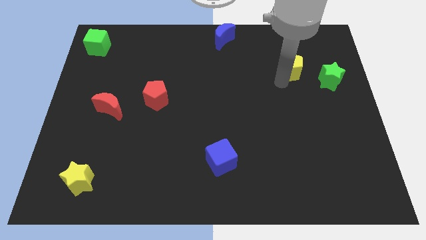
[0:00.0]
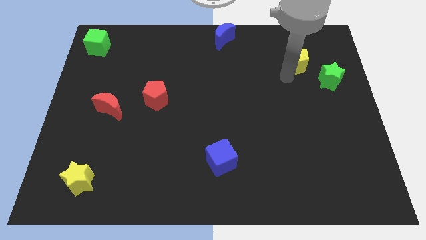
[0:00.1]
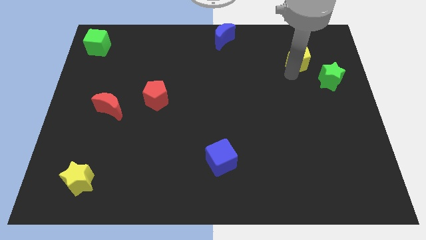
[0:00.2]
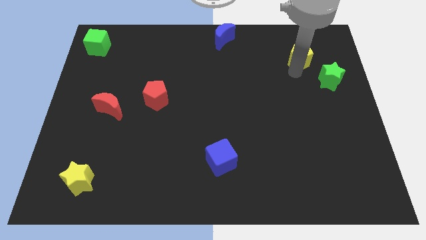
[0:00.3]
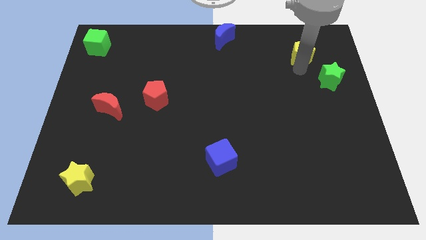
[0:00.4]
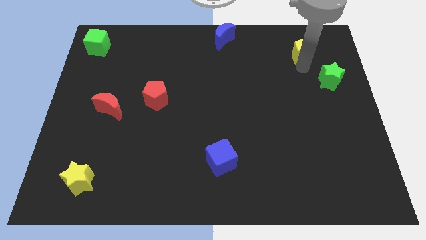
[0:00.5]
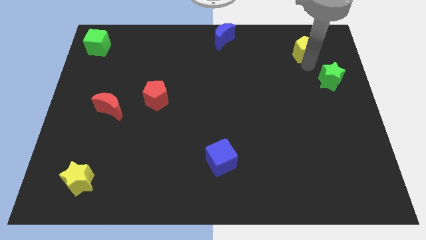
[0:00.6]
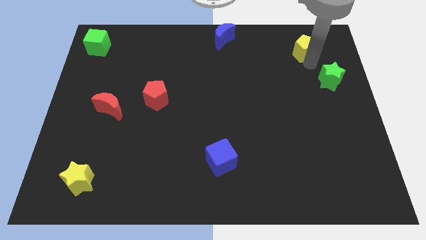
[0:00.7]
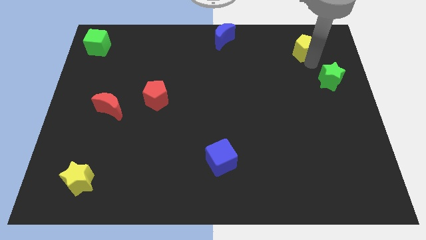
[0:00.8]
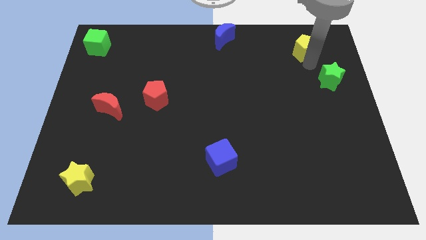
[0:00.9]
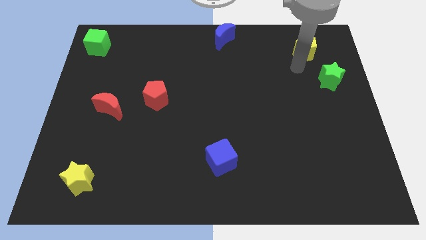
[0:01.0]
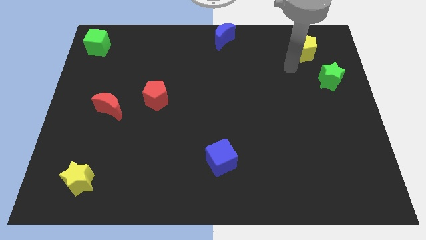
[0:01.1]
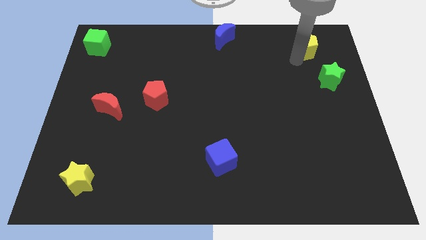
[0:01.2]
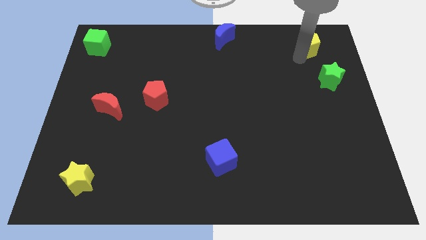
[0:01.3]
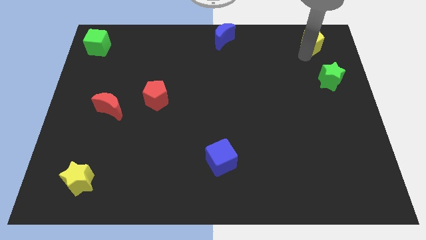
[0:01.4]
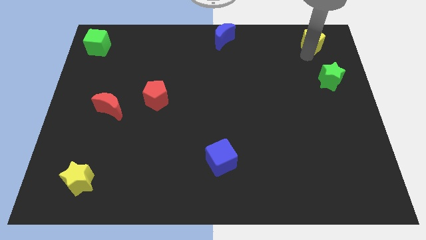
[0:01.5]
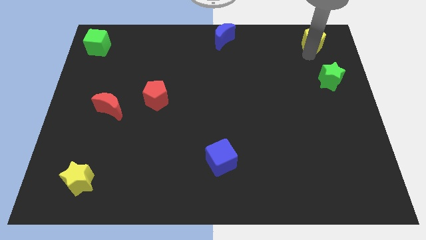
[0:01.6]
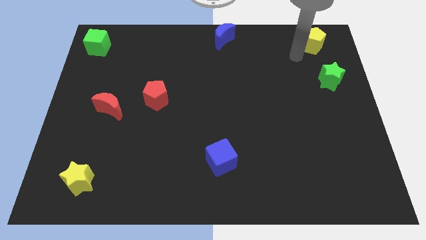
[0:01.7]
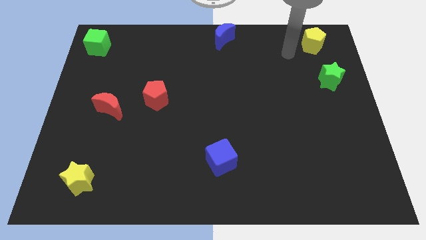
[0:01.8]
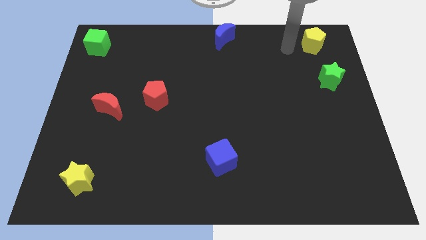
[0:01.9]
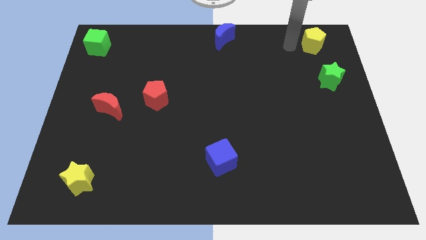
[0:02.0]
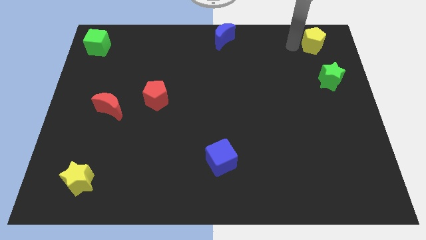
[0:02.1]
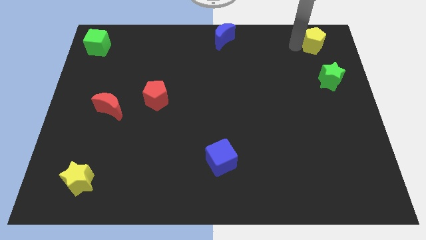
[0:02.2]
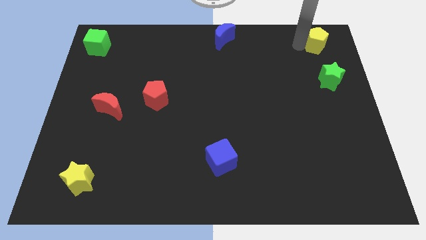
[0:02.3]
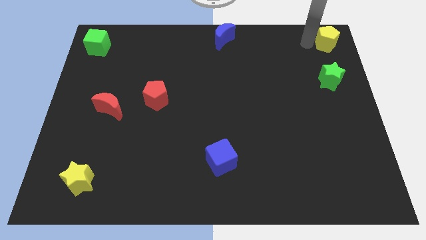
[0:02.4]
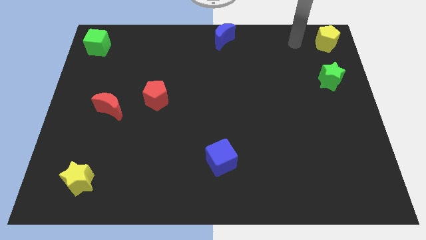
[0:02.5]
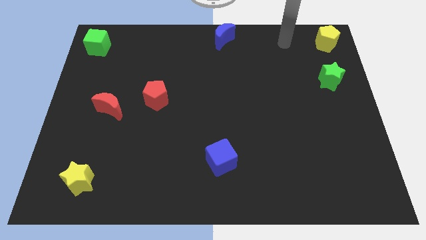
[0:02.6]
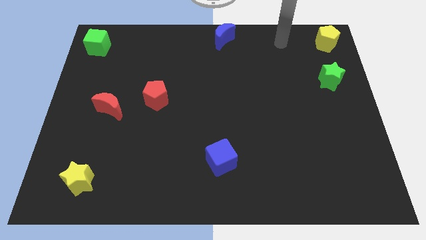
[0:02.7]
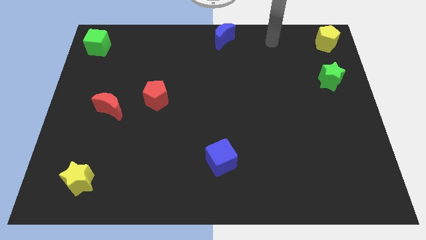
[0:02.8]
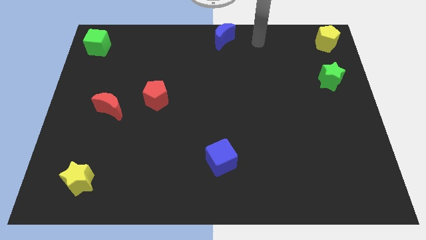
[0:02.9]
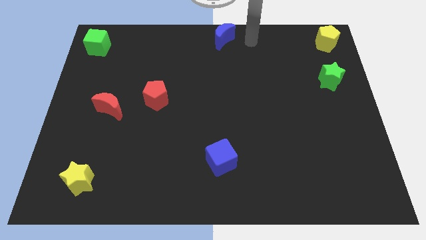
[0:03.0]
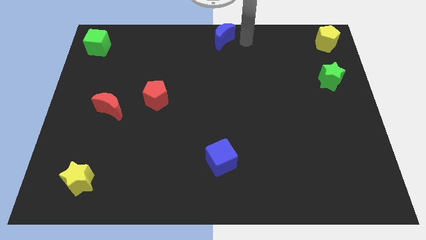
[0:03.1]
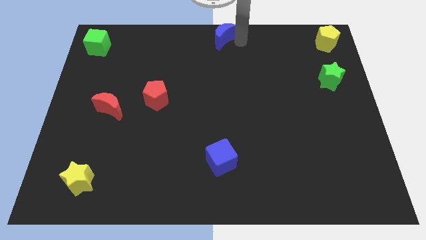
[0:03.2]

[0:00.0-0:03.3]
move yellow pentagon to the top right corner of the board

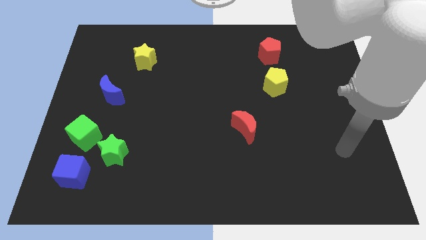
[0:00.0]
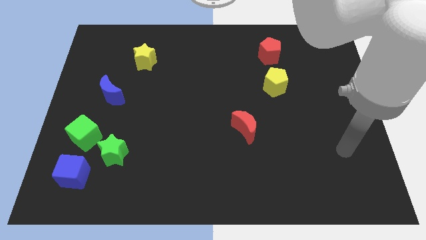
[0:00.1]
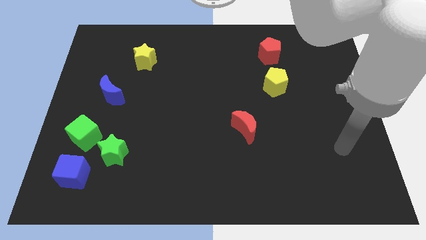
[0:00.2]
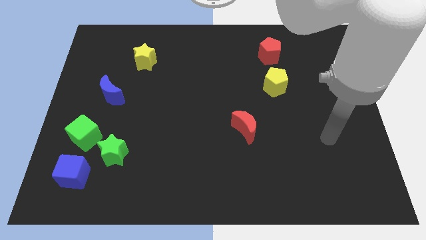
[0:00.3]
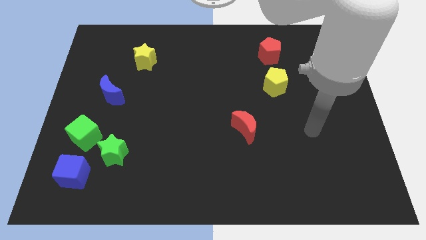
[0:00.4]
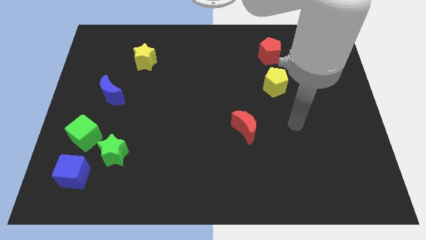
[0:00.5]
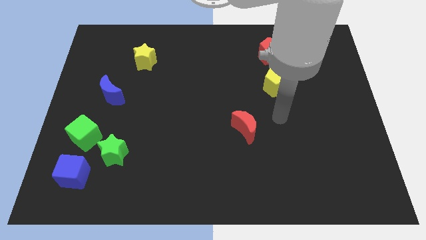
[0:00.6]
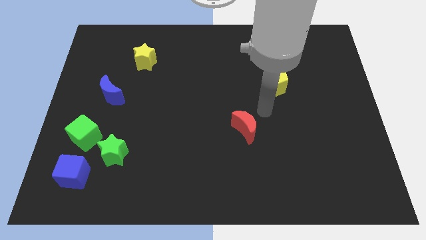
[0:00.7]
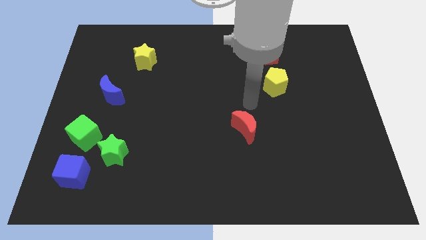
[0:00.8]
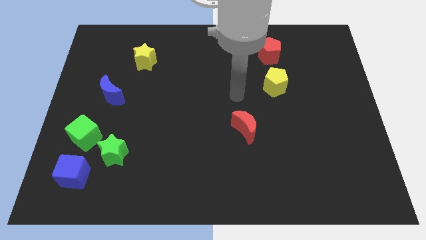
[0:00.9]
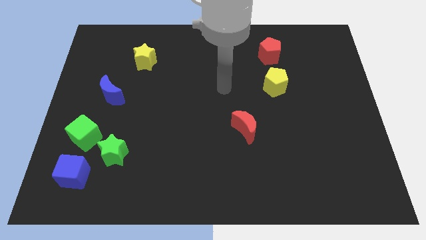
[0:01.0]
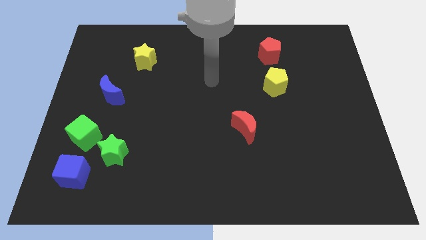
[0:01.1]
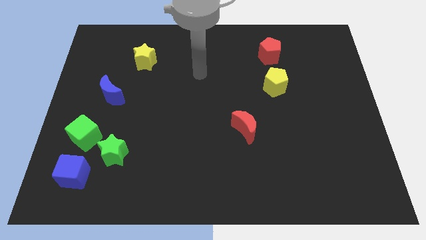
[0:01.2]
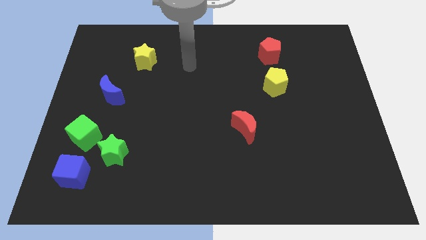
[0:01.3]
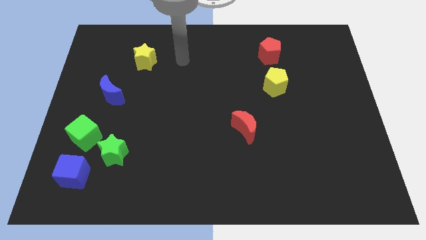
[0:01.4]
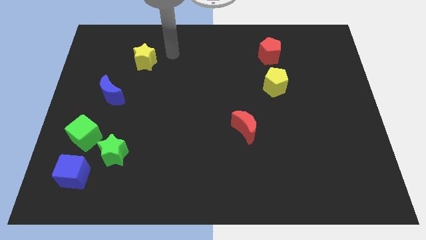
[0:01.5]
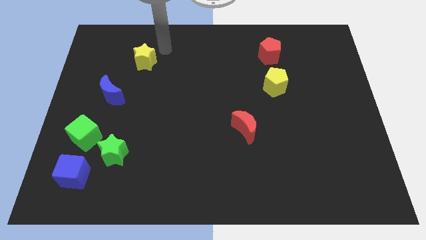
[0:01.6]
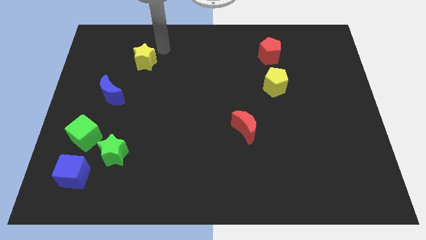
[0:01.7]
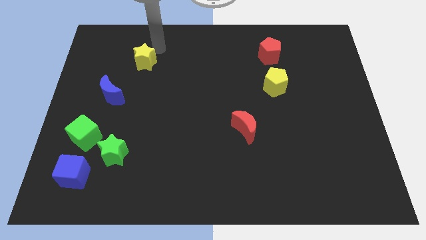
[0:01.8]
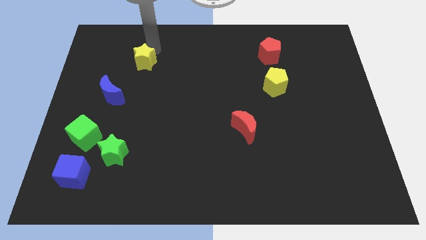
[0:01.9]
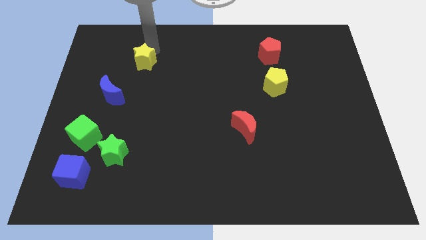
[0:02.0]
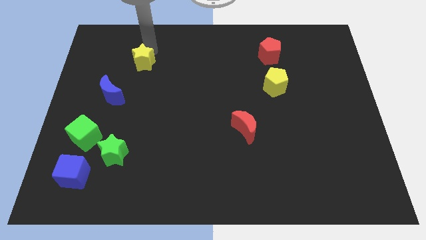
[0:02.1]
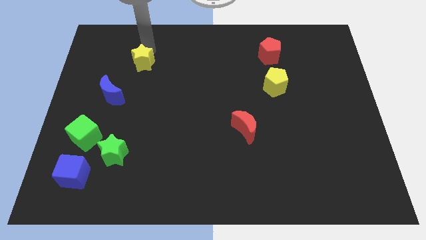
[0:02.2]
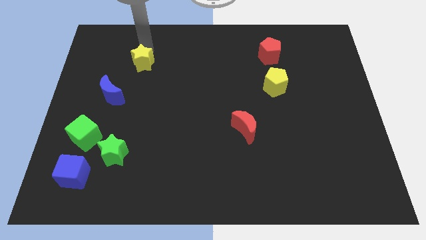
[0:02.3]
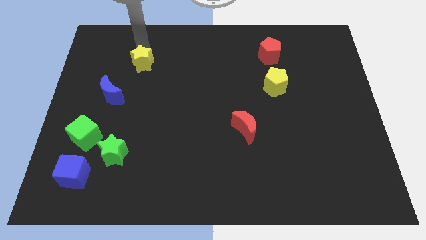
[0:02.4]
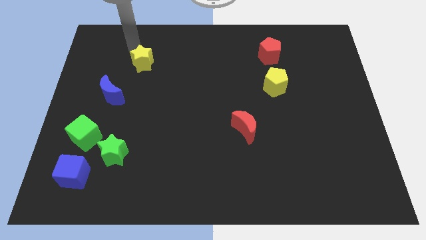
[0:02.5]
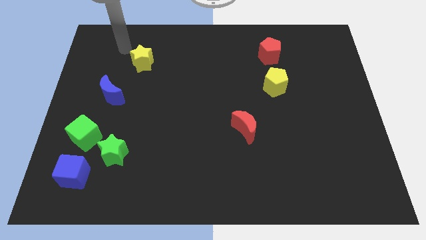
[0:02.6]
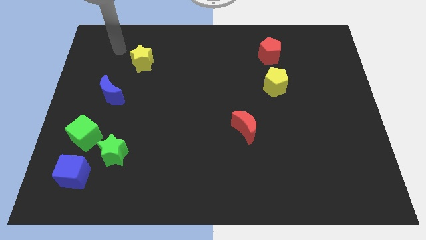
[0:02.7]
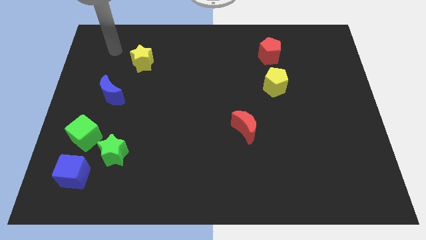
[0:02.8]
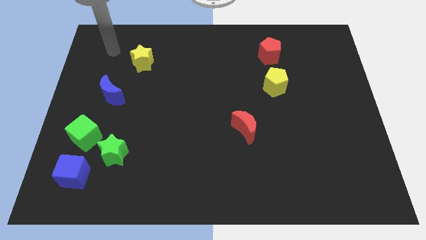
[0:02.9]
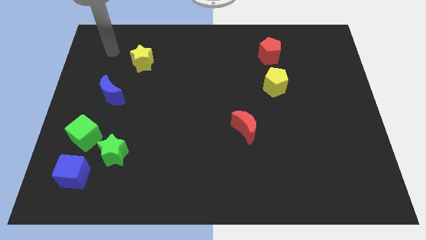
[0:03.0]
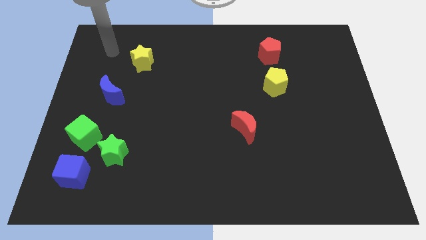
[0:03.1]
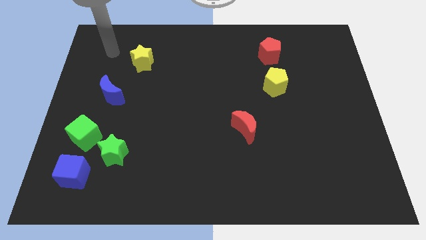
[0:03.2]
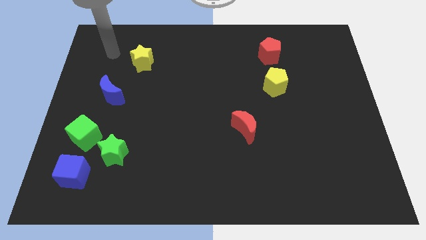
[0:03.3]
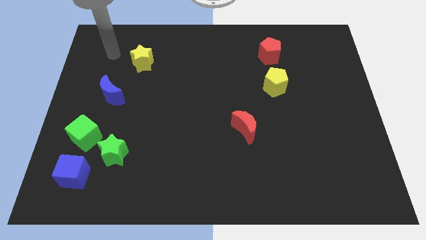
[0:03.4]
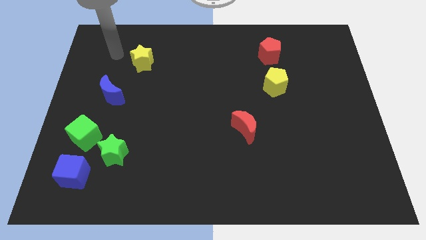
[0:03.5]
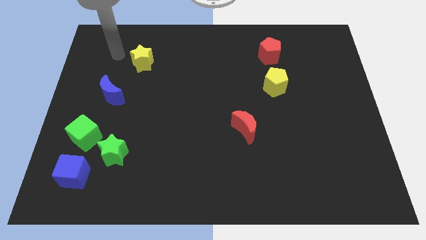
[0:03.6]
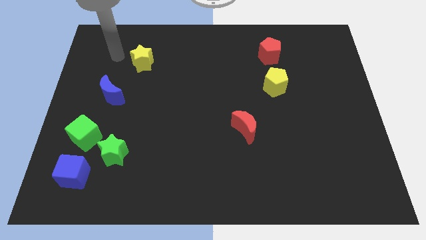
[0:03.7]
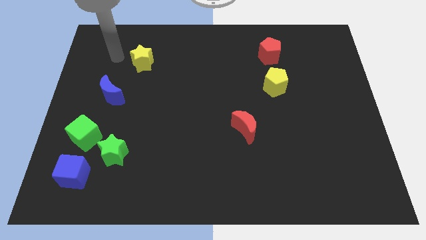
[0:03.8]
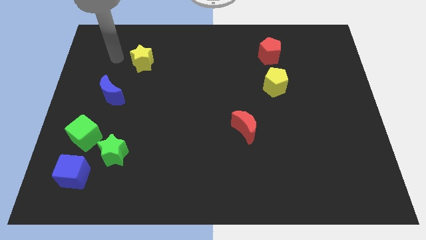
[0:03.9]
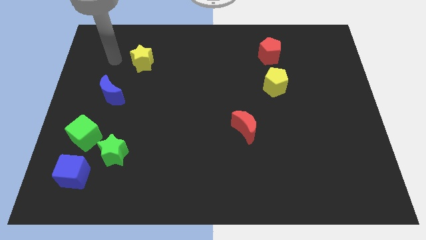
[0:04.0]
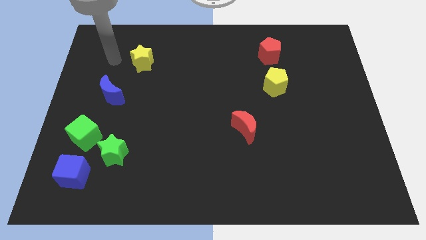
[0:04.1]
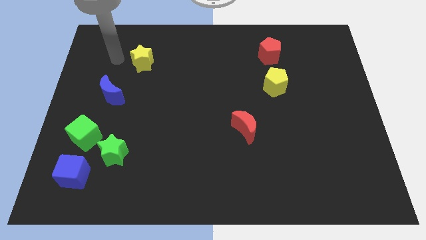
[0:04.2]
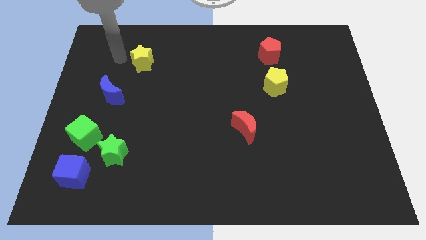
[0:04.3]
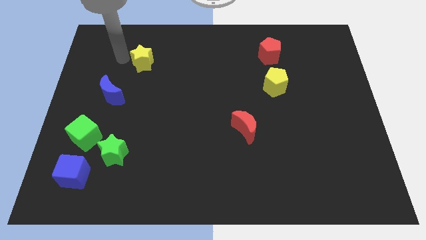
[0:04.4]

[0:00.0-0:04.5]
touch the yellow star

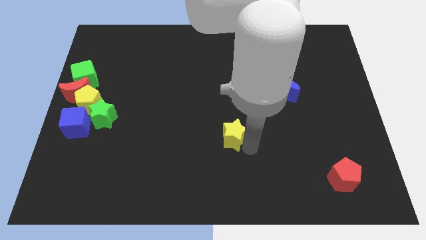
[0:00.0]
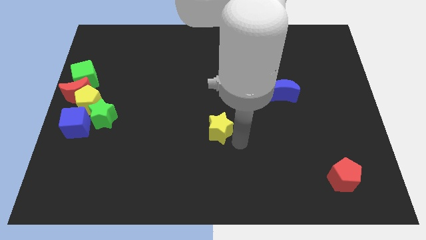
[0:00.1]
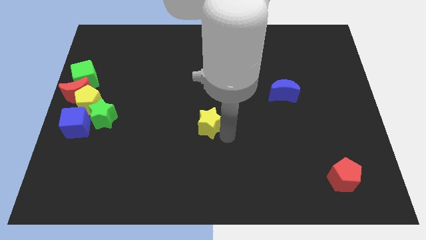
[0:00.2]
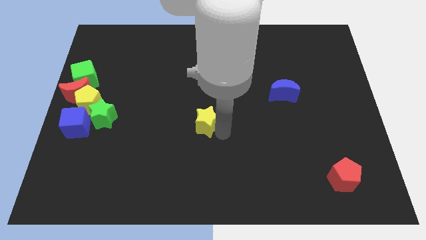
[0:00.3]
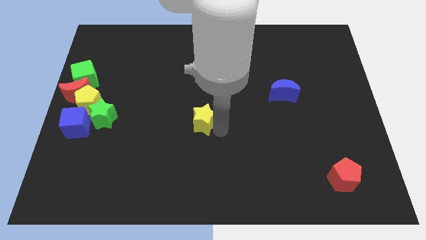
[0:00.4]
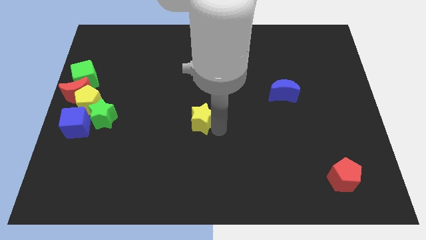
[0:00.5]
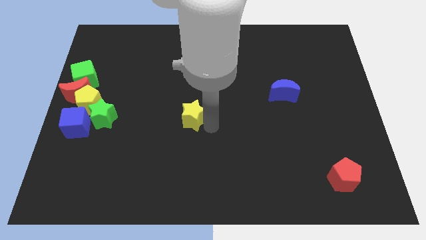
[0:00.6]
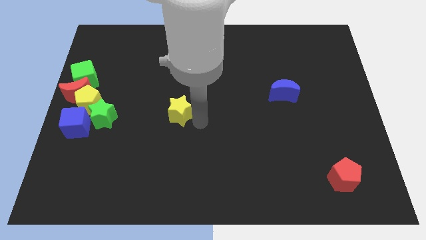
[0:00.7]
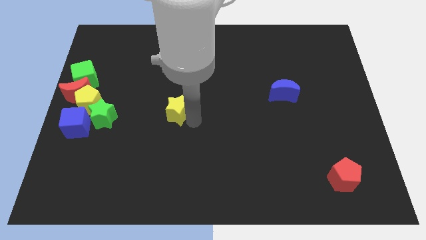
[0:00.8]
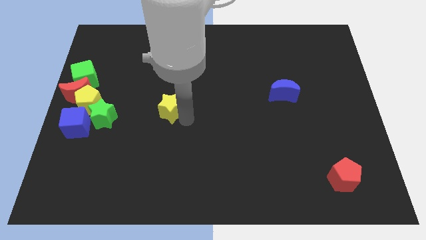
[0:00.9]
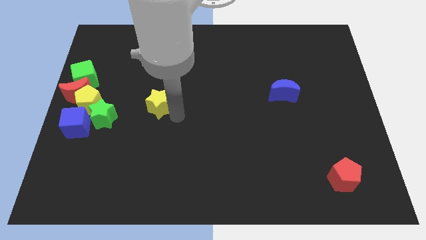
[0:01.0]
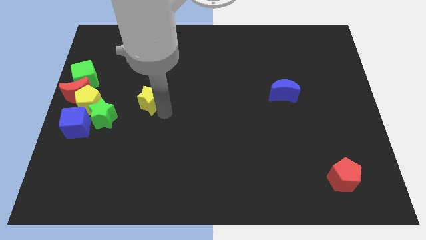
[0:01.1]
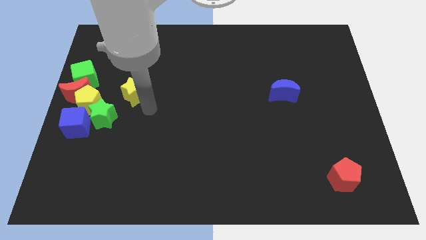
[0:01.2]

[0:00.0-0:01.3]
place yellow star parallel to yellow pentagon

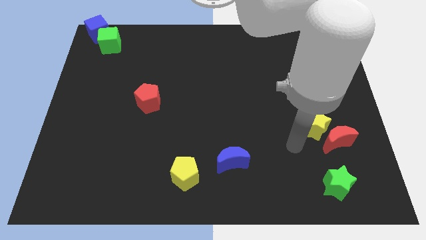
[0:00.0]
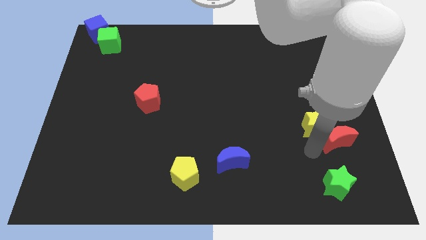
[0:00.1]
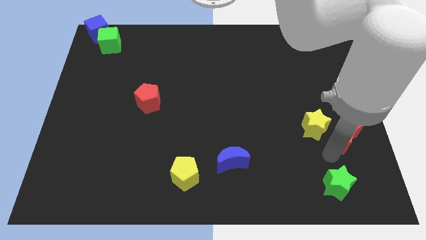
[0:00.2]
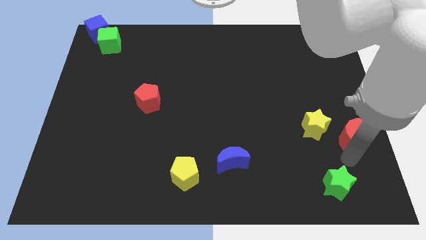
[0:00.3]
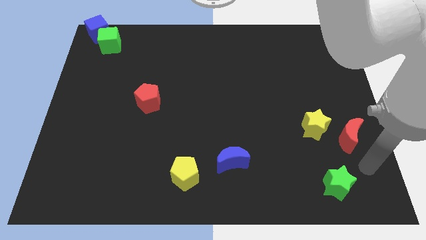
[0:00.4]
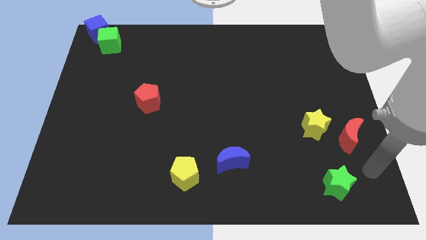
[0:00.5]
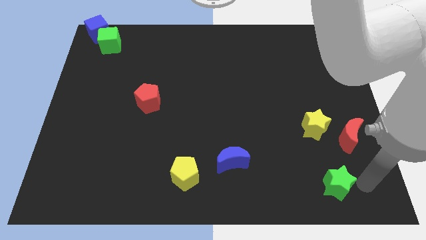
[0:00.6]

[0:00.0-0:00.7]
move your arm to the right of the green star
